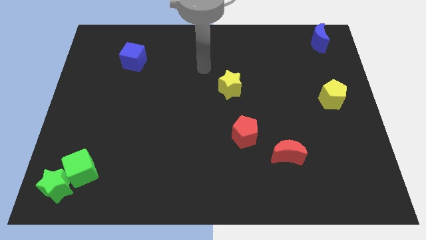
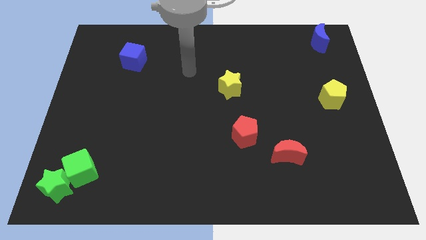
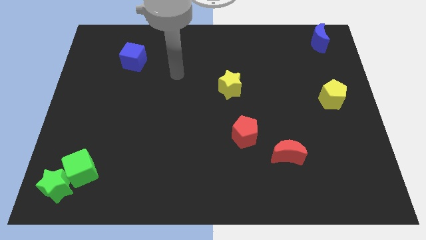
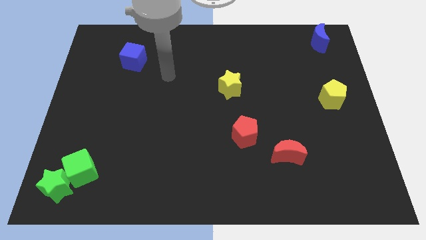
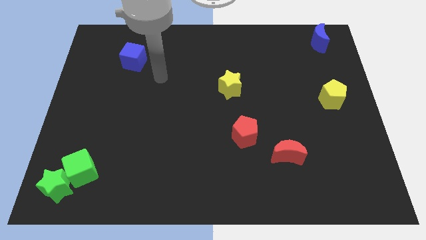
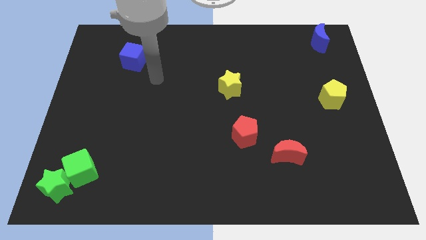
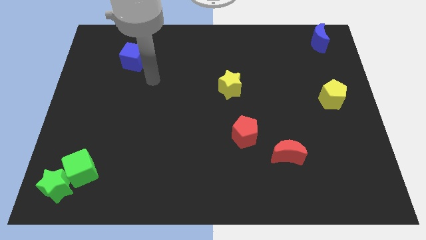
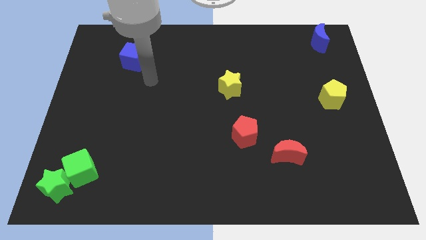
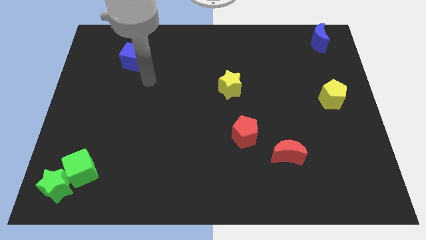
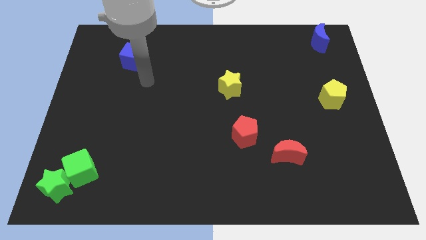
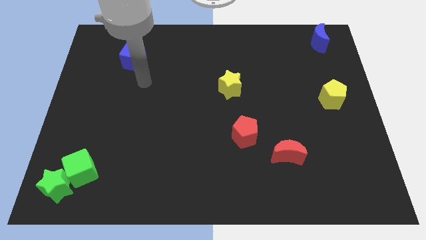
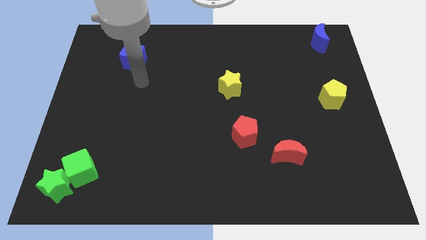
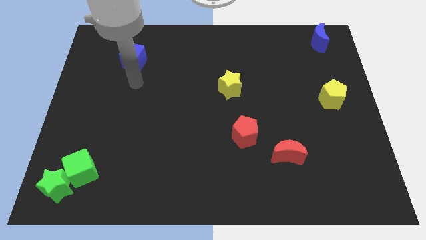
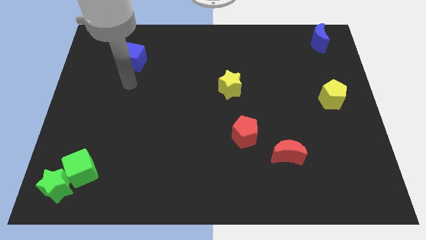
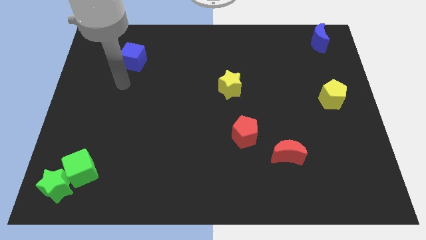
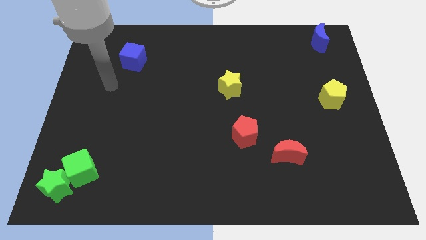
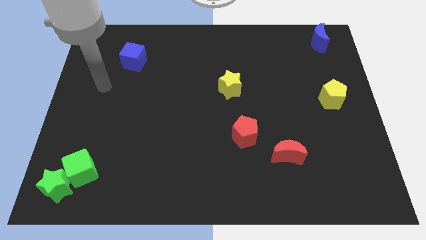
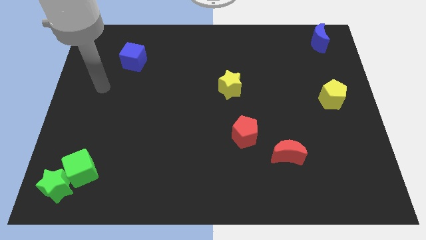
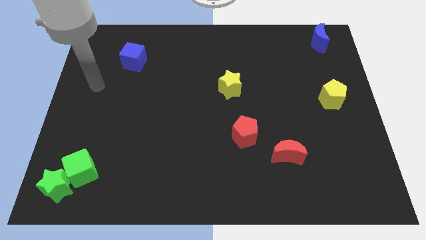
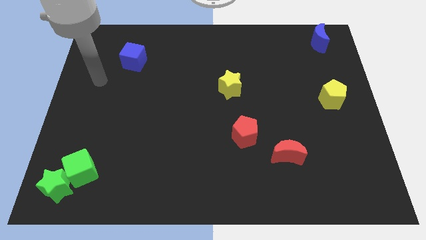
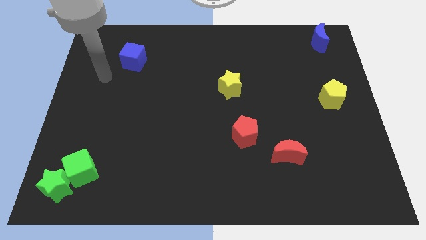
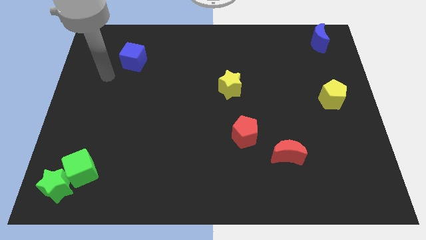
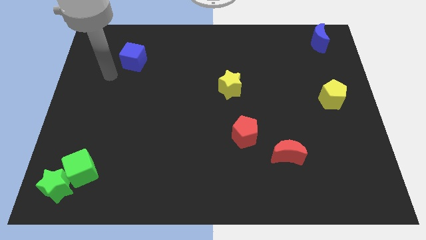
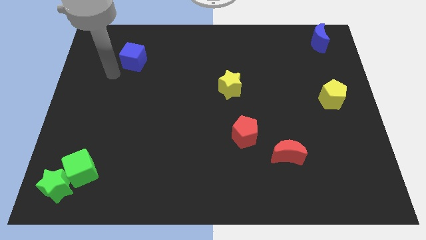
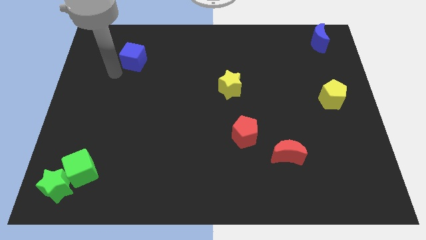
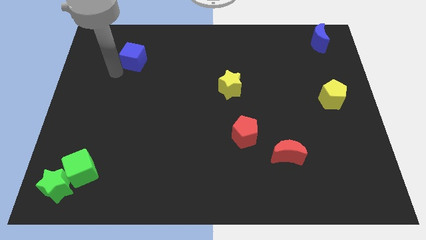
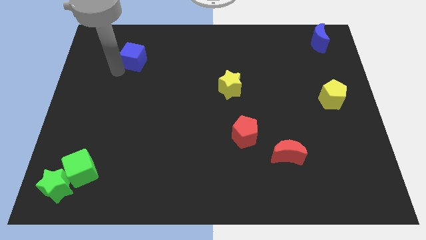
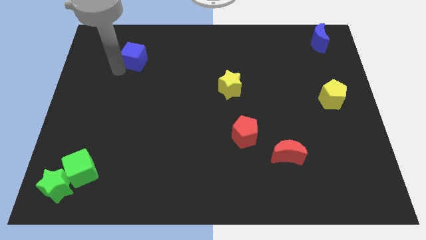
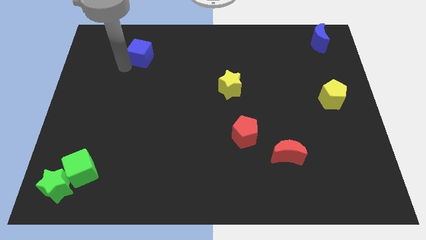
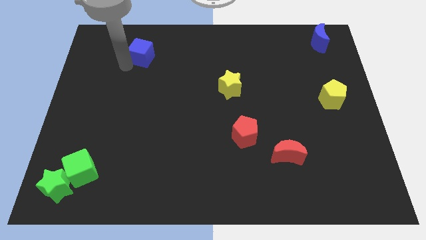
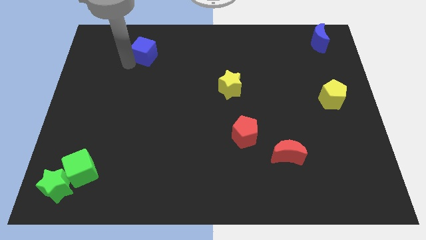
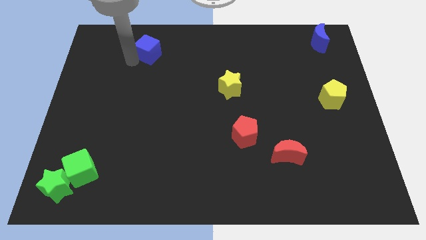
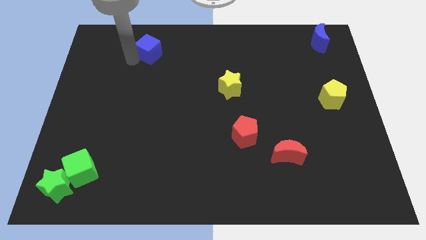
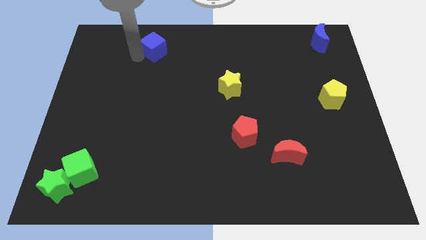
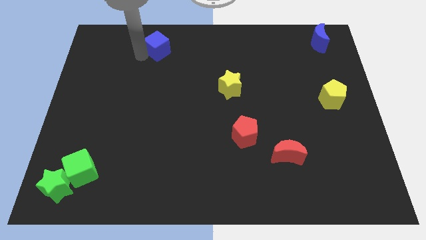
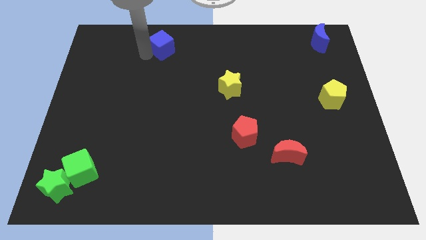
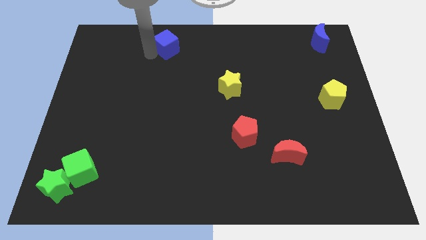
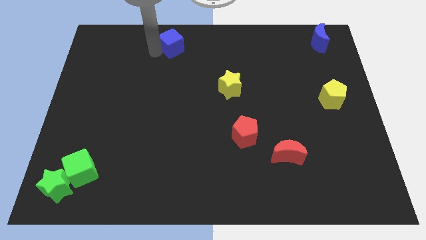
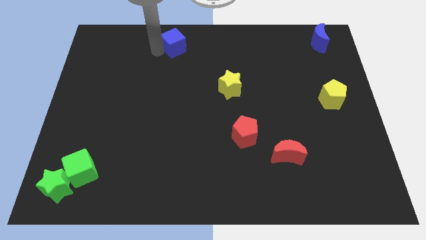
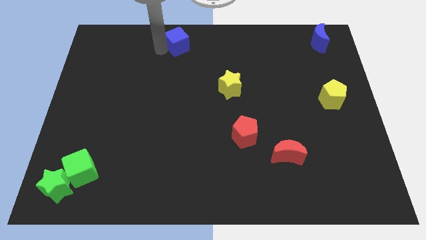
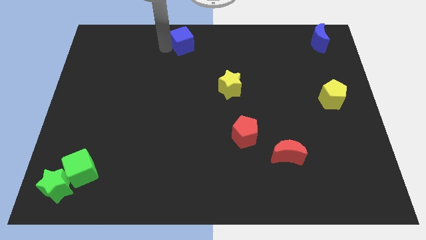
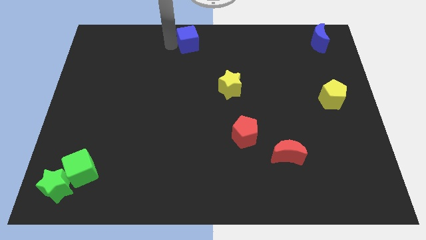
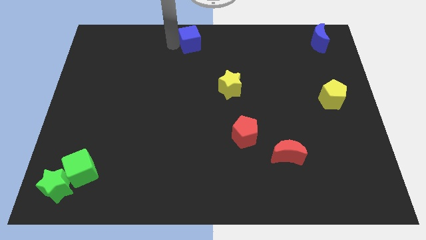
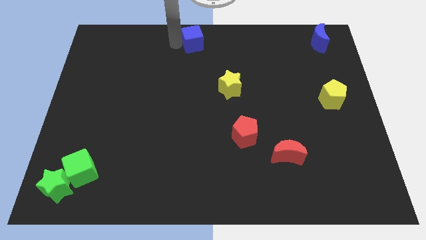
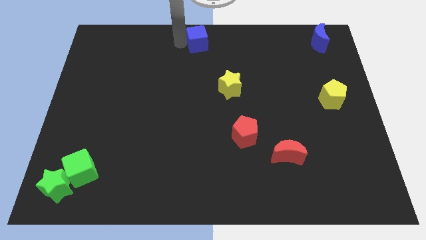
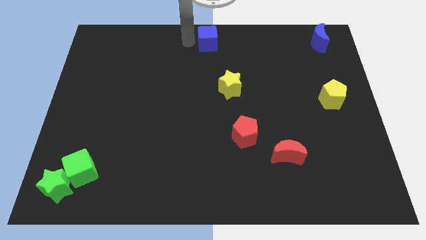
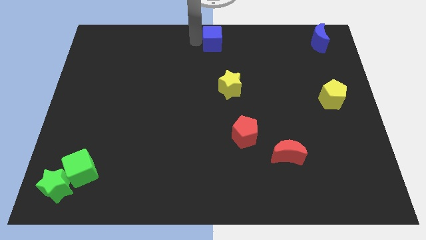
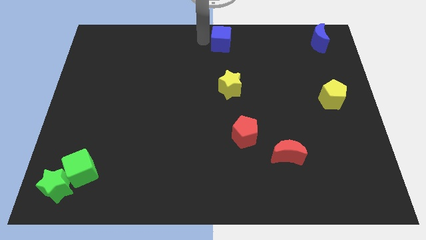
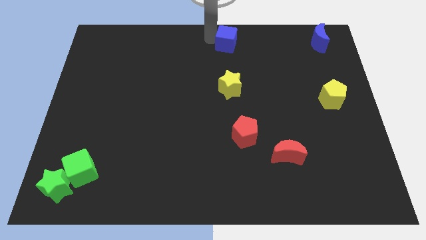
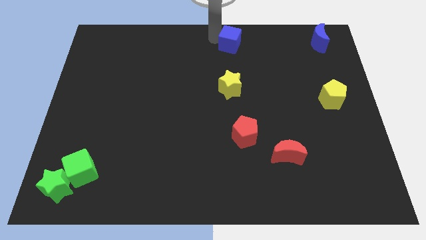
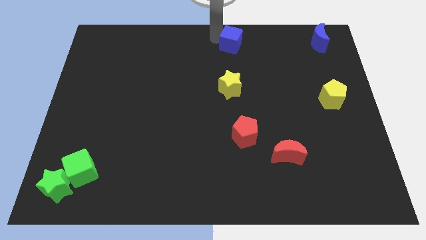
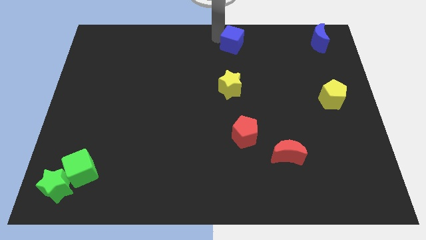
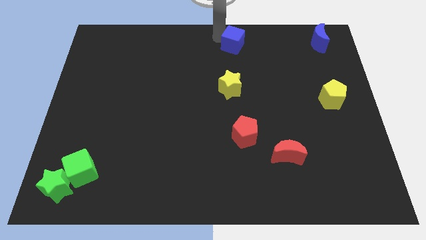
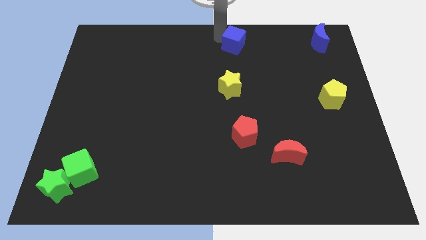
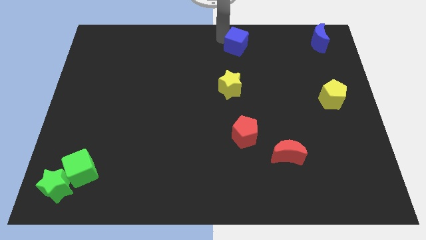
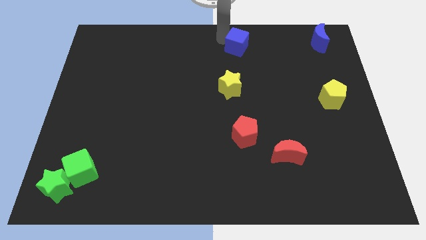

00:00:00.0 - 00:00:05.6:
move the blue cube slightly to the right of the board

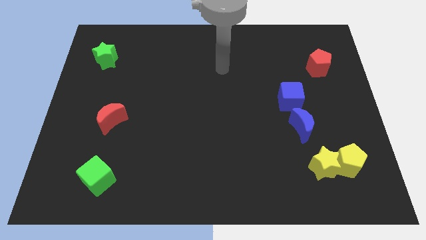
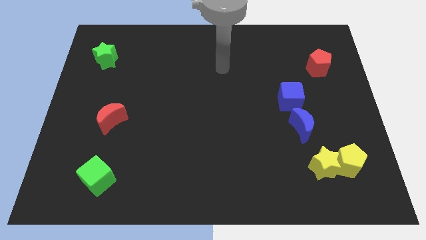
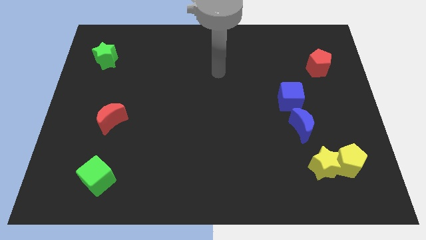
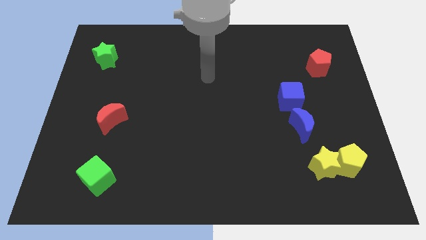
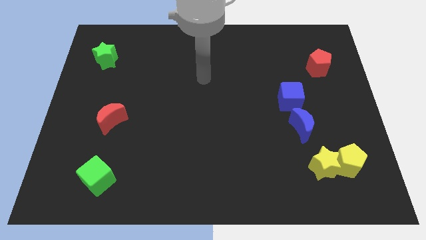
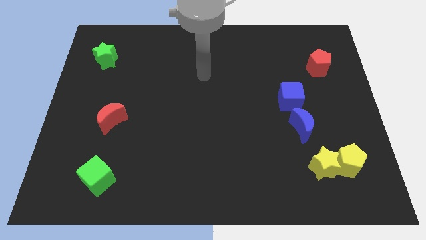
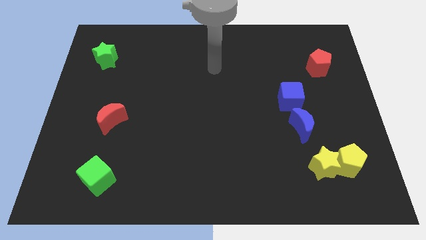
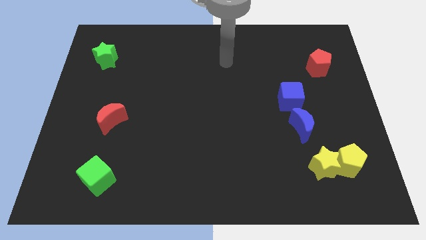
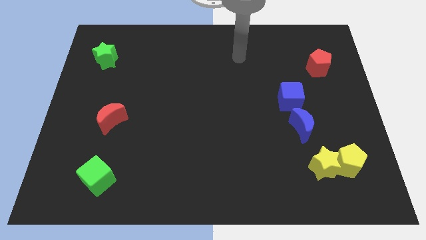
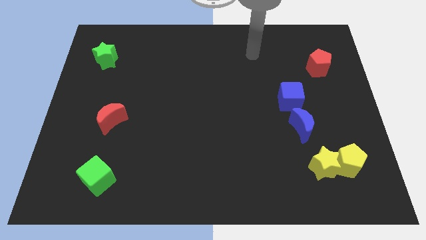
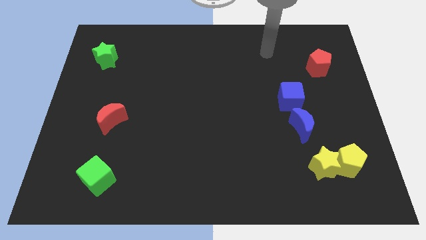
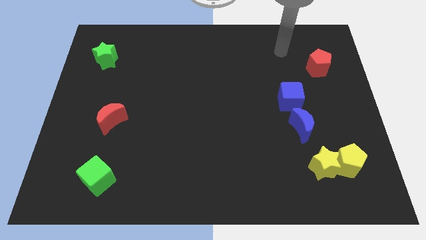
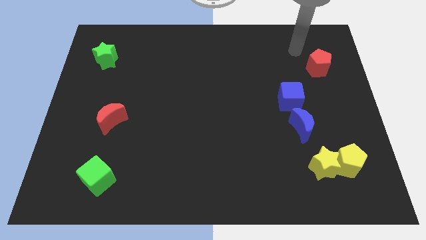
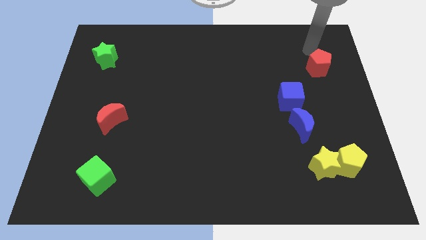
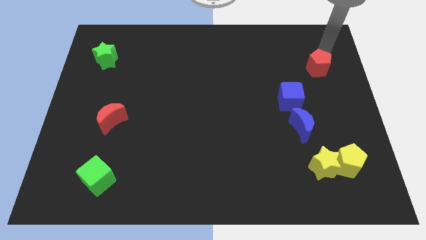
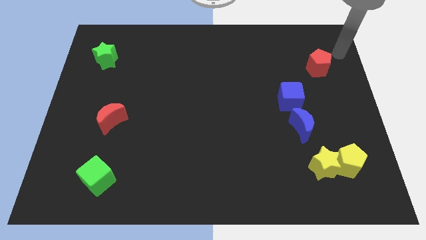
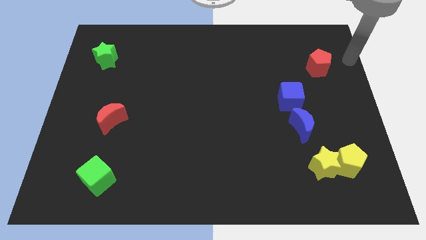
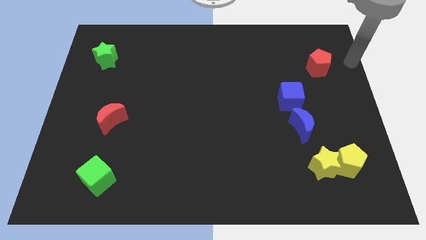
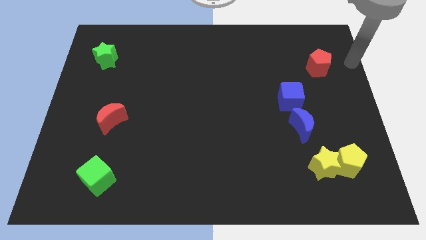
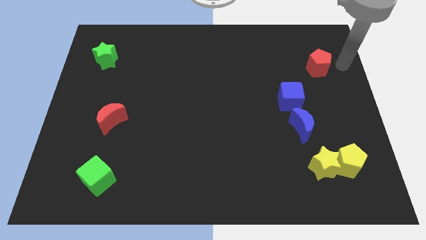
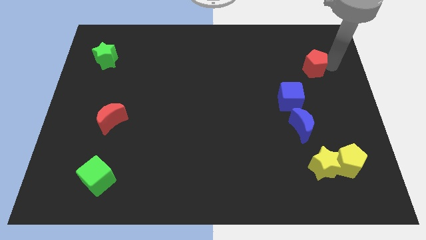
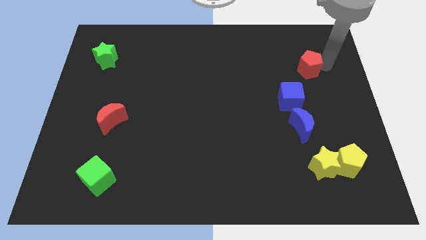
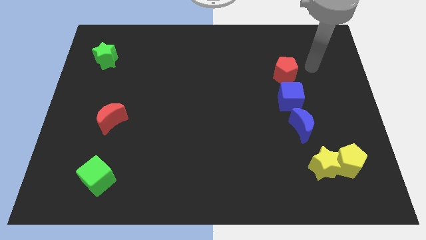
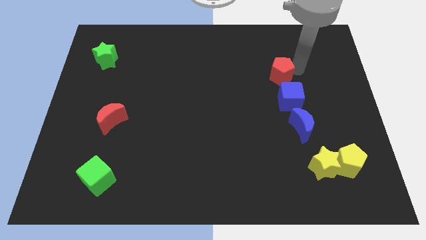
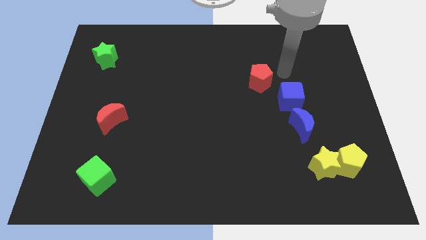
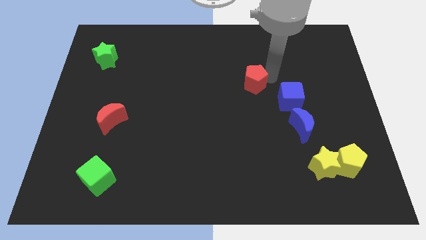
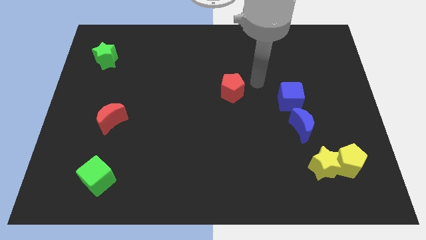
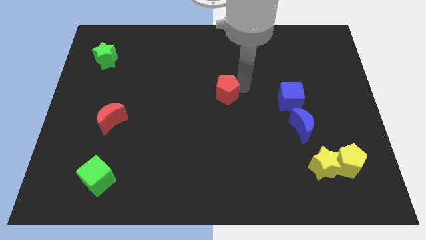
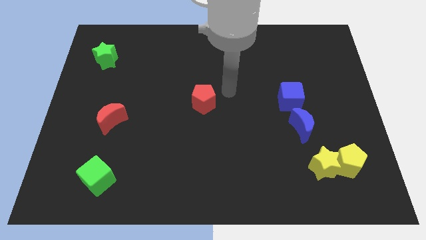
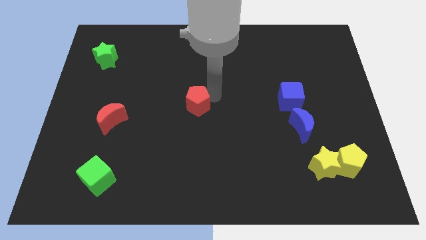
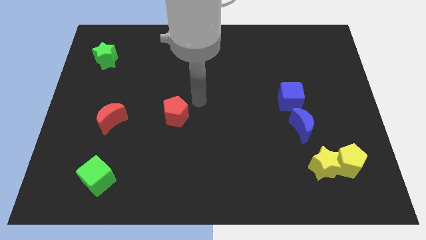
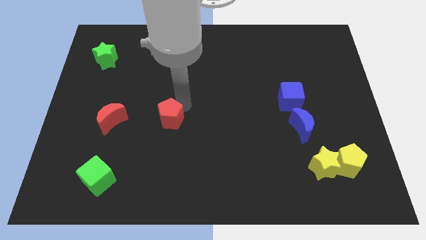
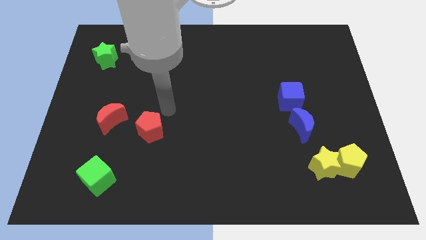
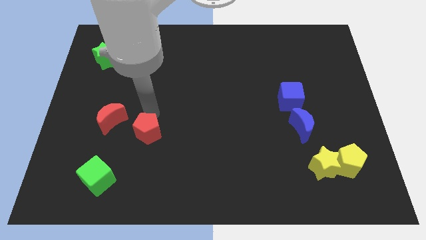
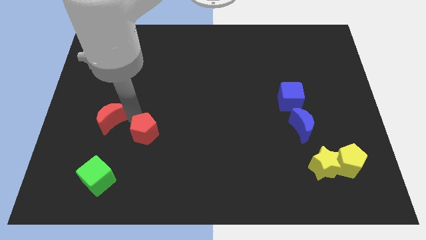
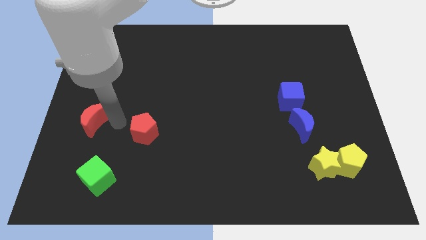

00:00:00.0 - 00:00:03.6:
move the red pentagon to the right of the red crescent

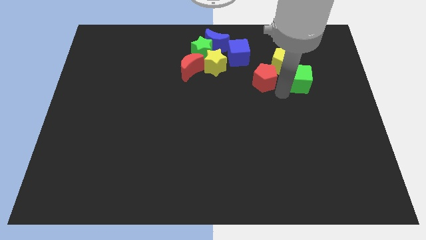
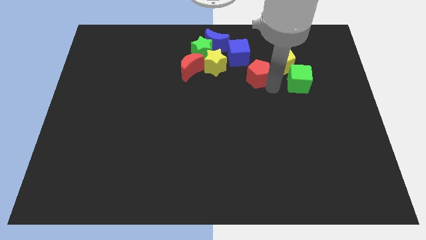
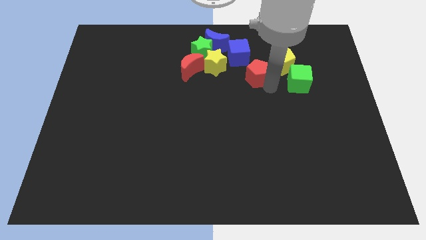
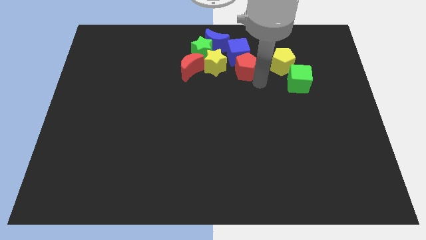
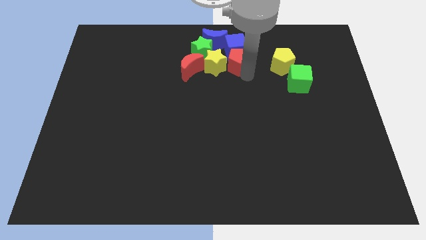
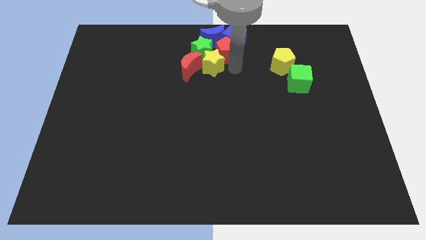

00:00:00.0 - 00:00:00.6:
push the red pentagon to the left of the blue cube
